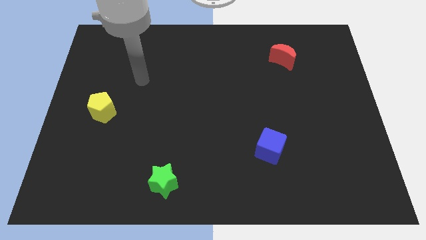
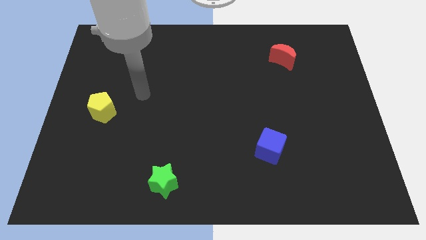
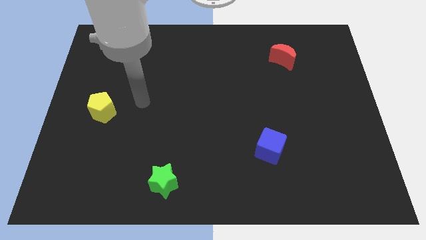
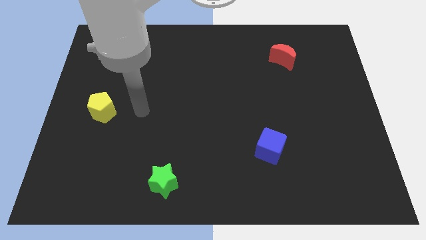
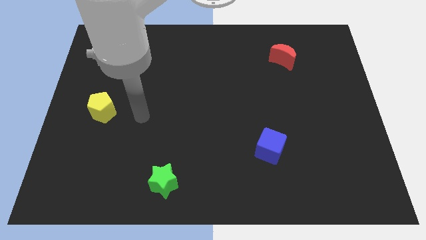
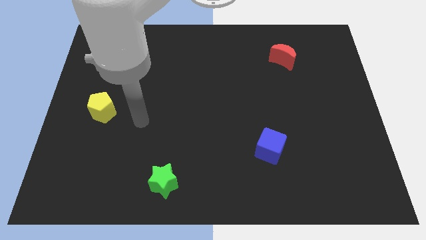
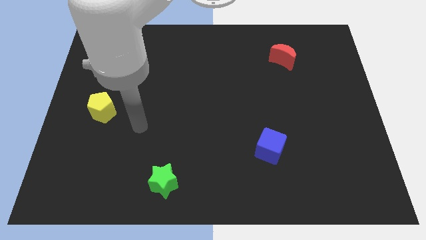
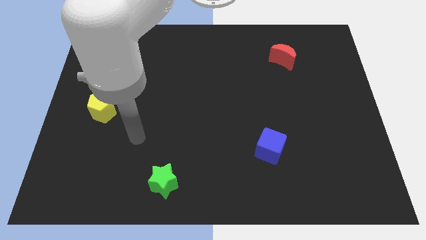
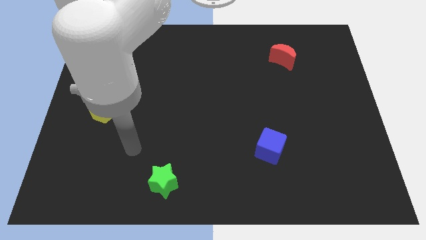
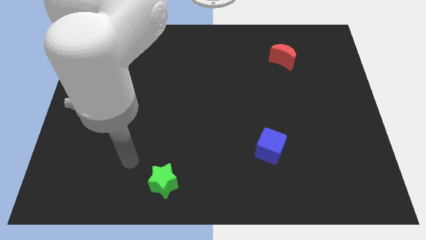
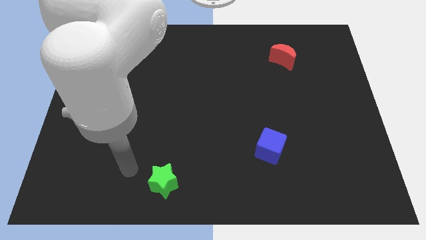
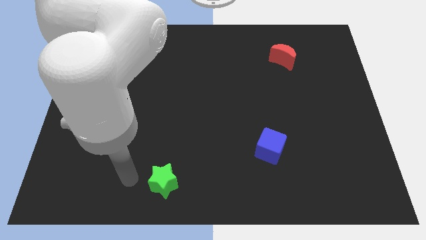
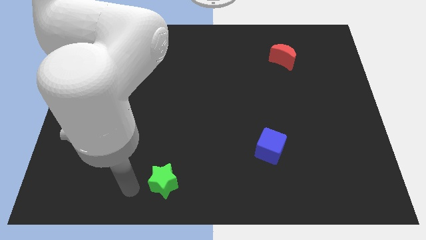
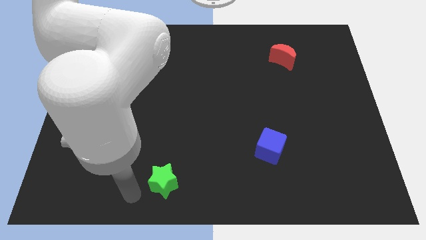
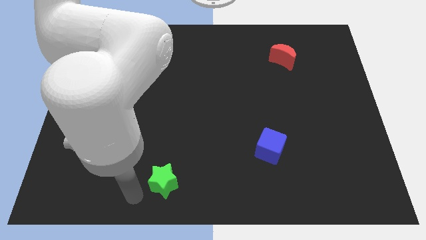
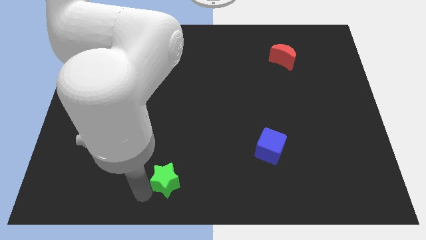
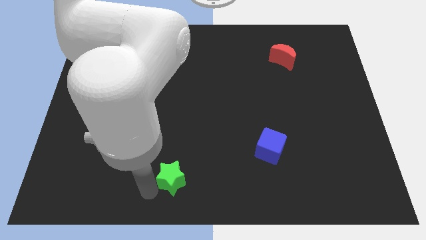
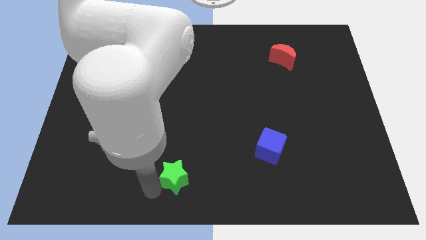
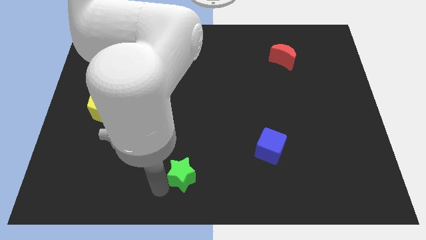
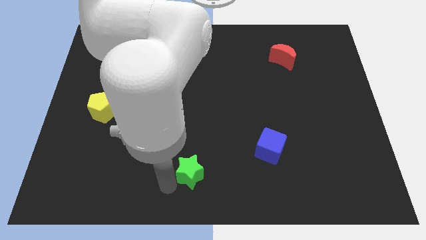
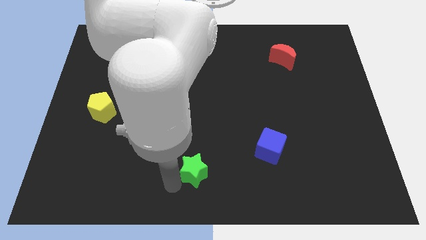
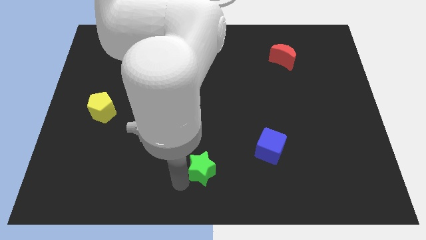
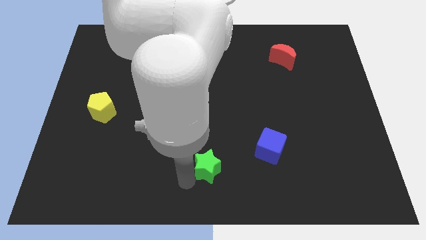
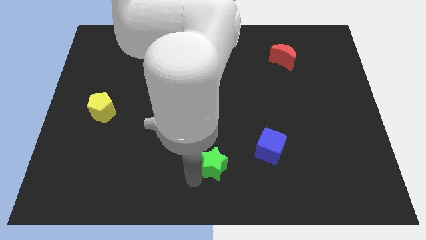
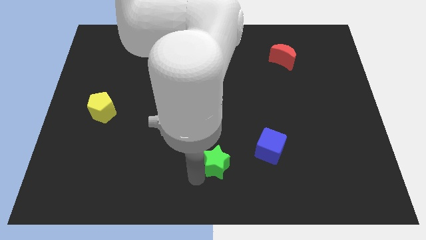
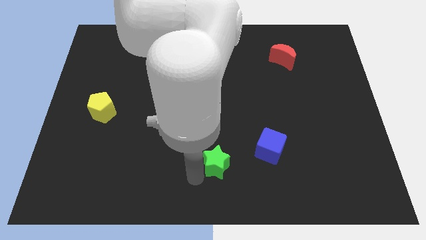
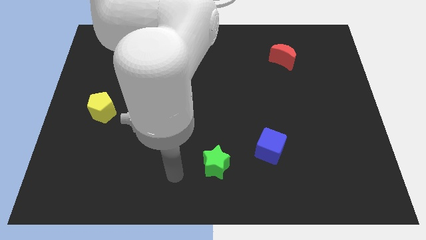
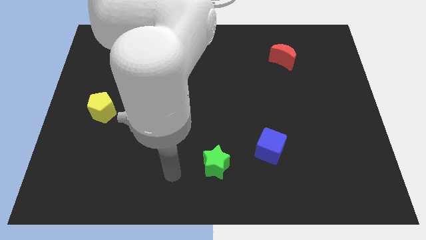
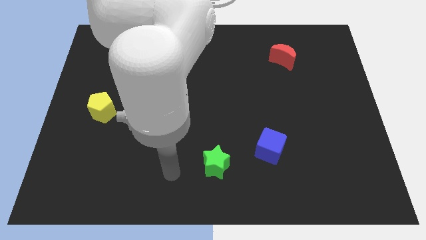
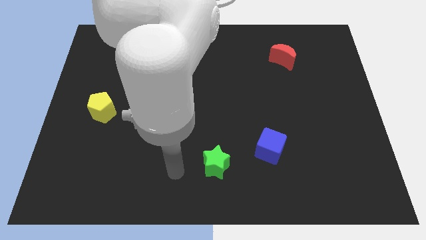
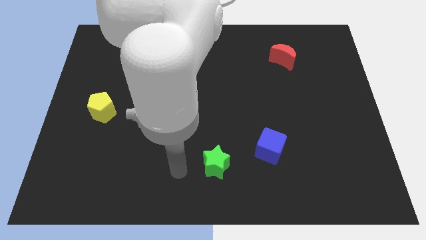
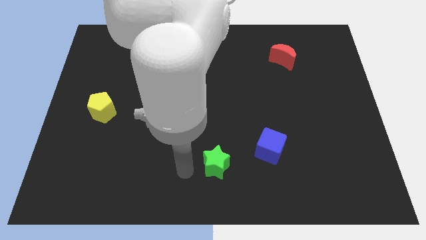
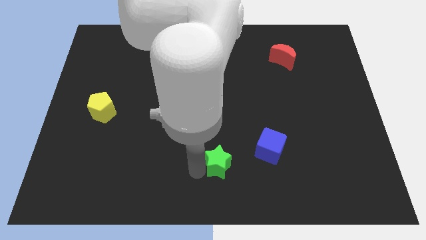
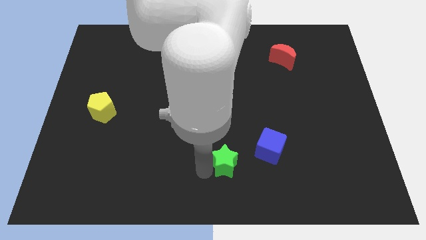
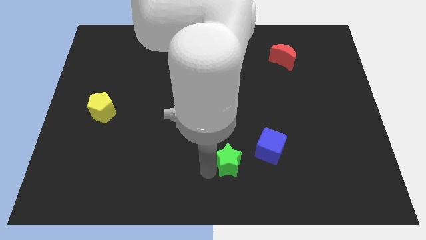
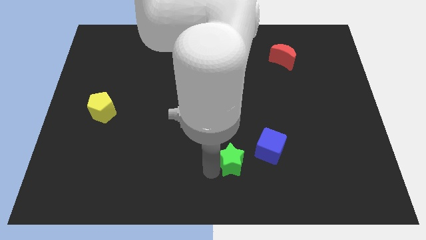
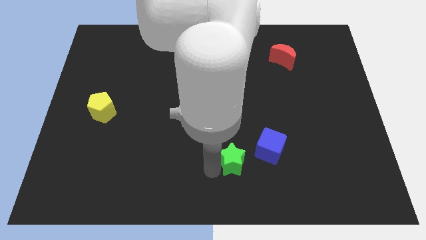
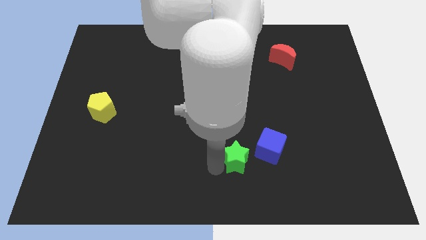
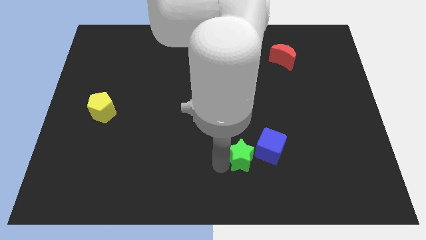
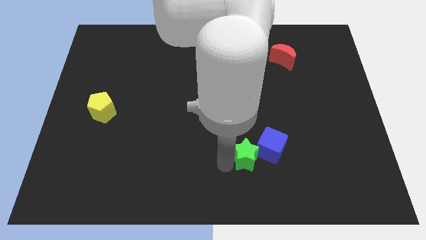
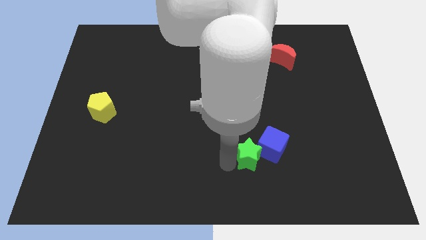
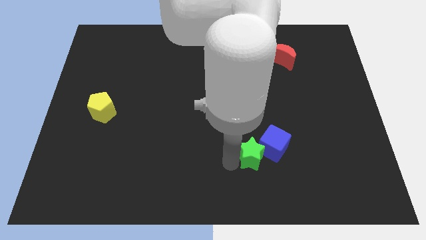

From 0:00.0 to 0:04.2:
push the star next to the blue block

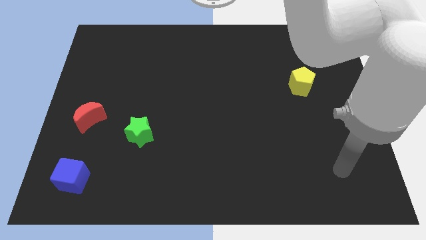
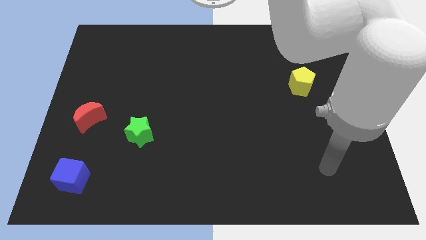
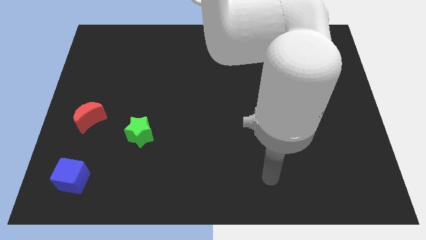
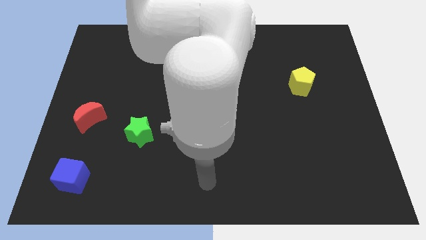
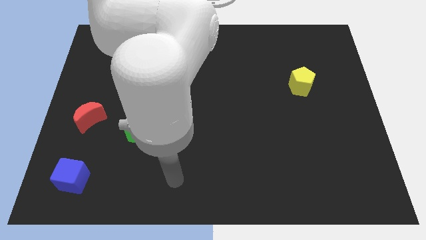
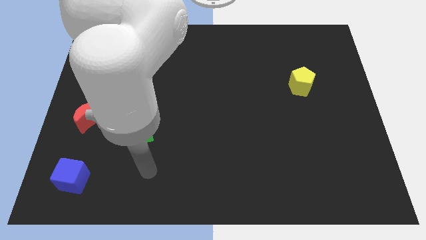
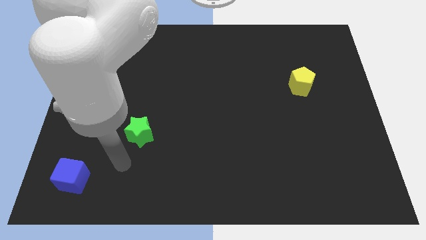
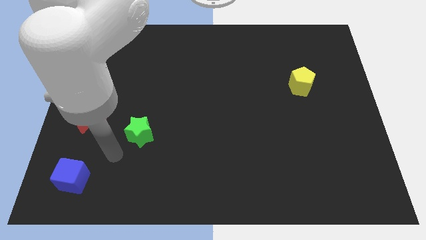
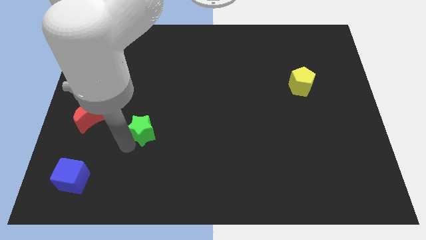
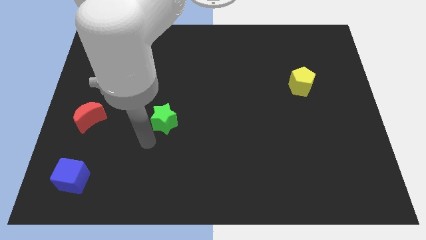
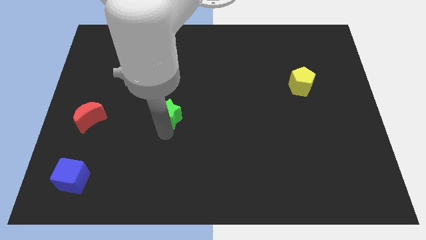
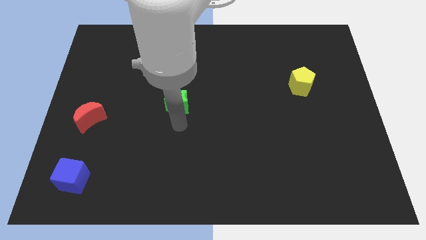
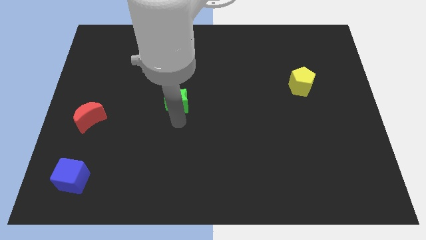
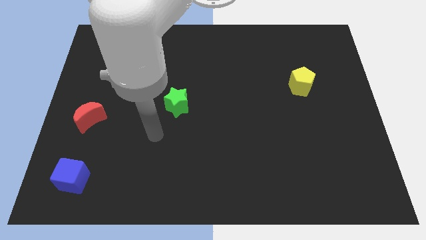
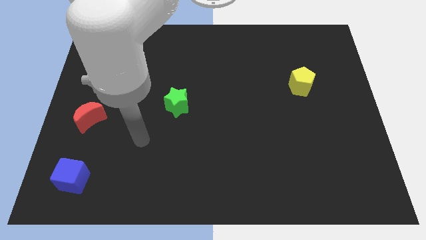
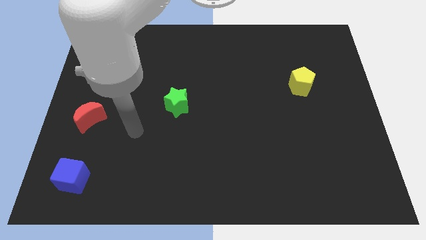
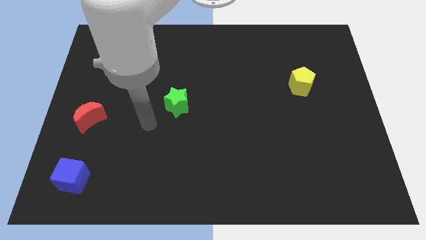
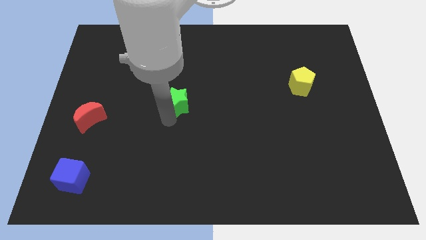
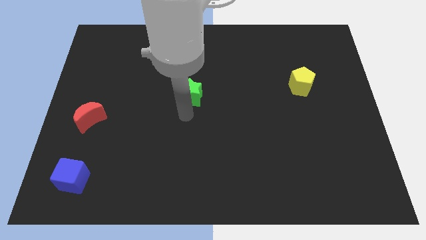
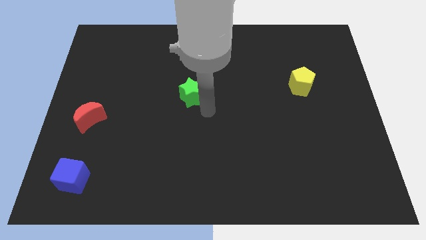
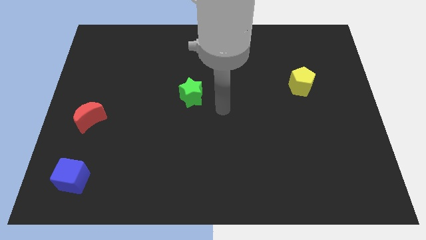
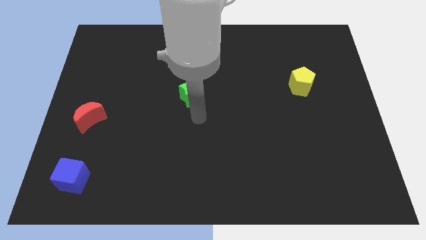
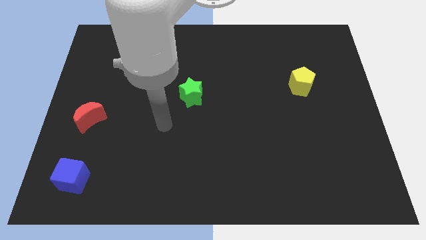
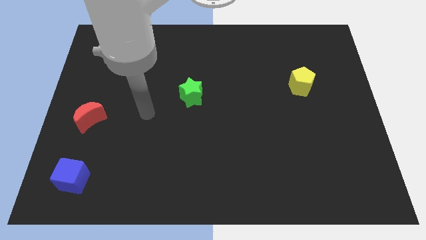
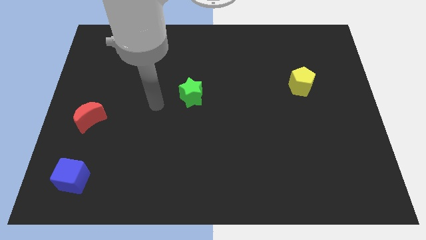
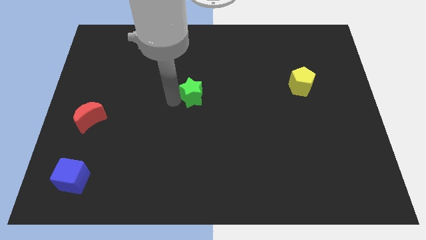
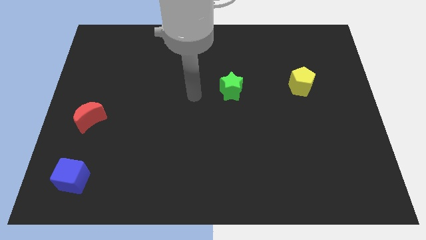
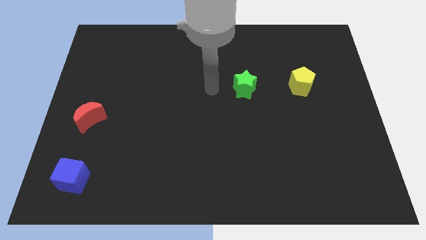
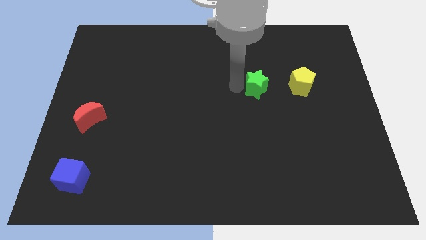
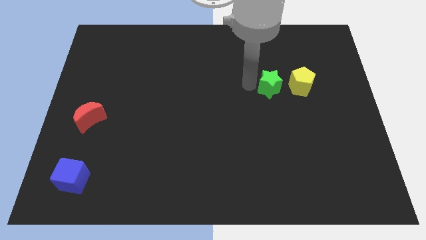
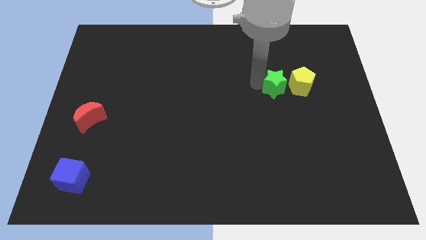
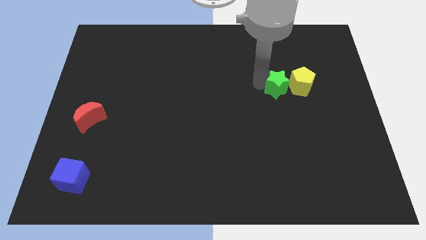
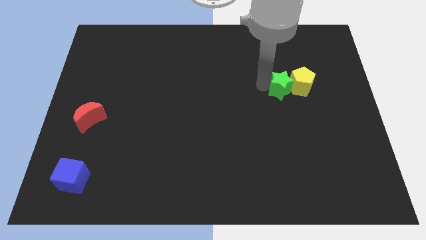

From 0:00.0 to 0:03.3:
move the green block next to the pentagon

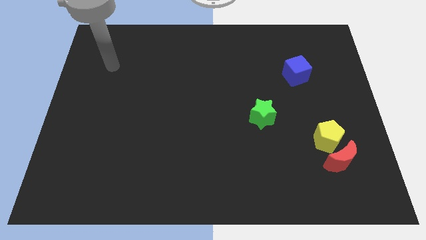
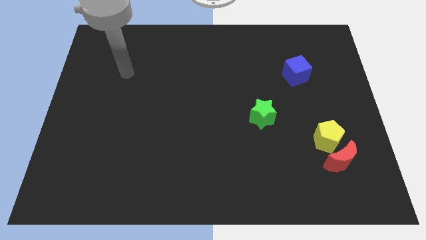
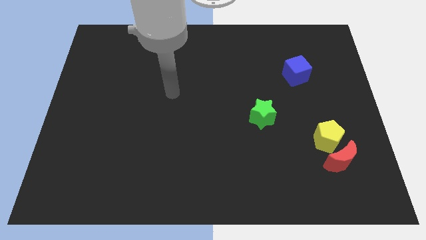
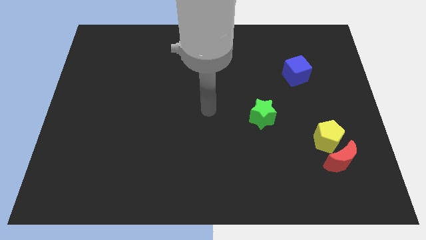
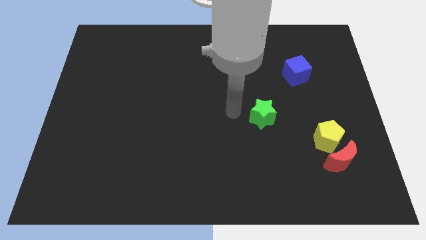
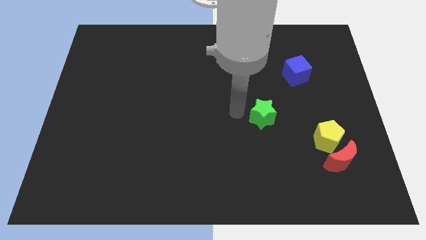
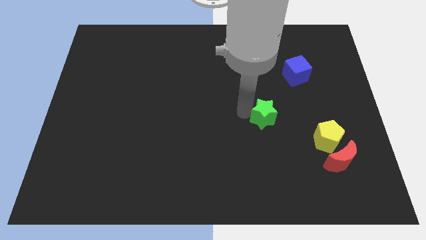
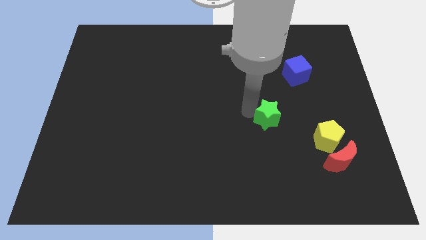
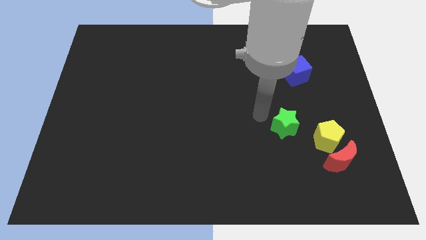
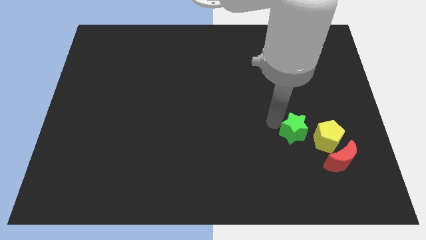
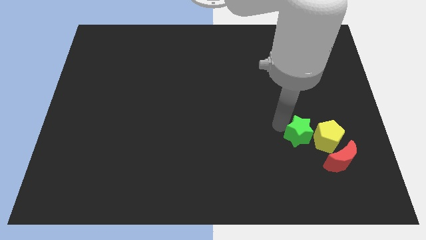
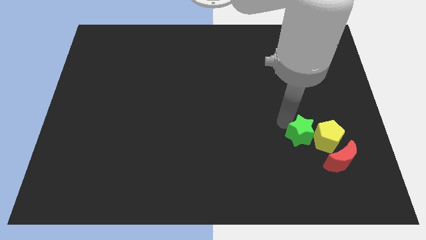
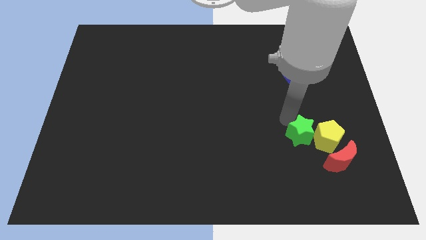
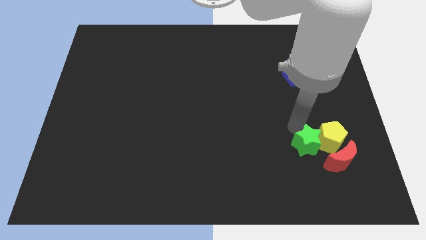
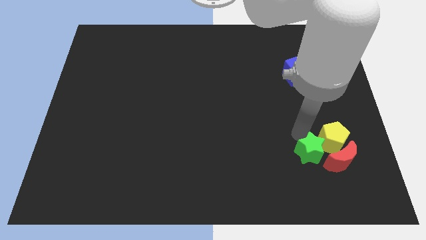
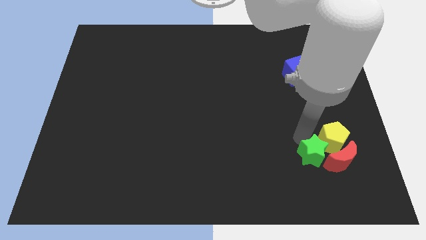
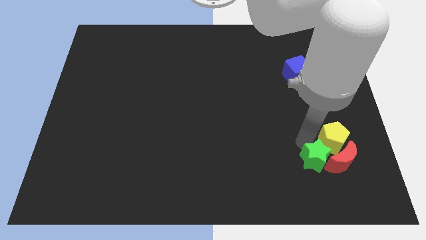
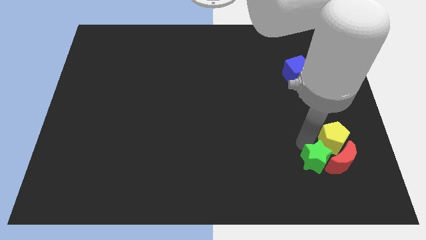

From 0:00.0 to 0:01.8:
slide the star to the moon
